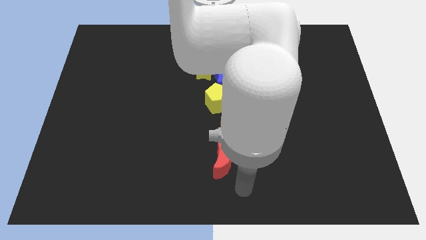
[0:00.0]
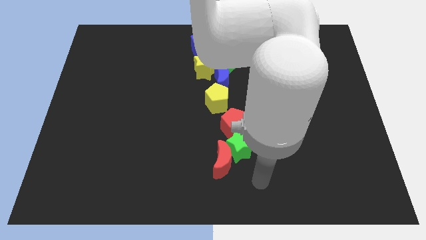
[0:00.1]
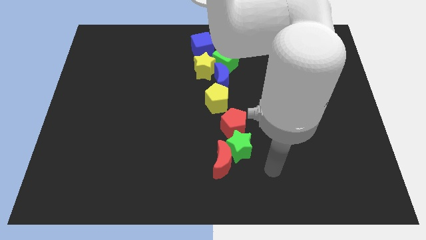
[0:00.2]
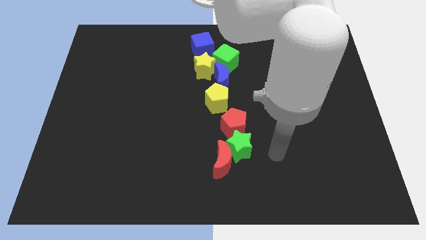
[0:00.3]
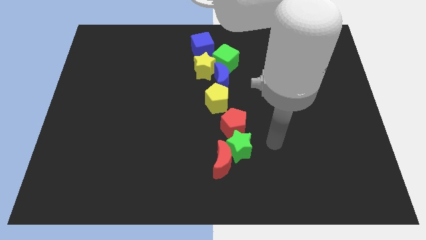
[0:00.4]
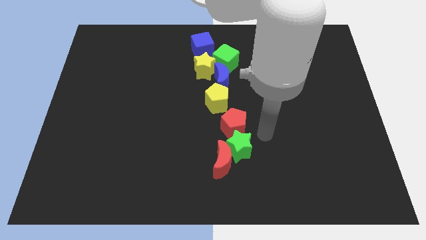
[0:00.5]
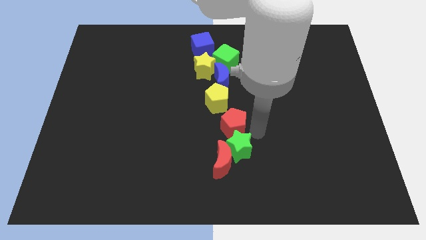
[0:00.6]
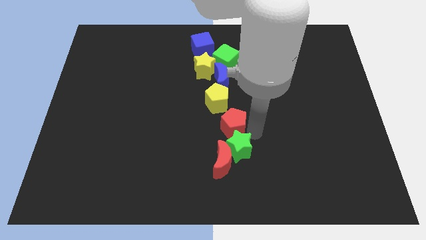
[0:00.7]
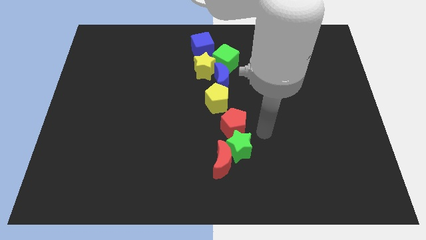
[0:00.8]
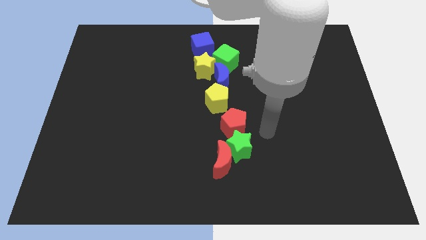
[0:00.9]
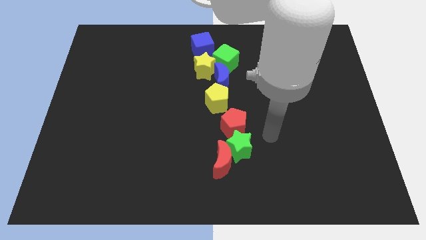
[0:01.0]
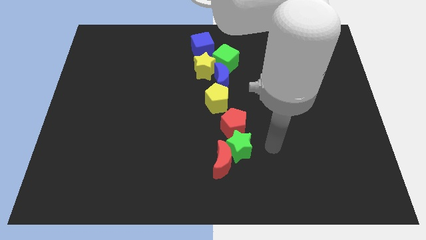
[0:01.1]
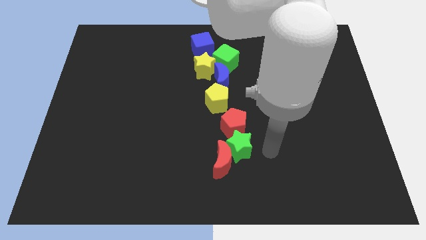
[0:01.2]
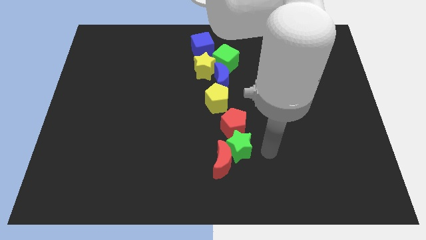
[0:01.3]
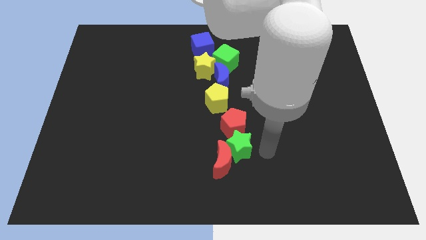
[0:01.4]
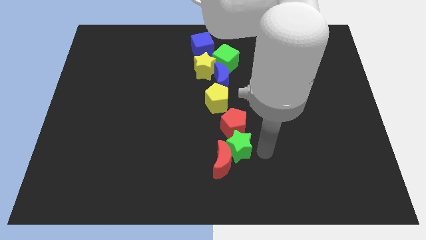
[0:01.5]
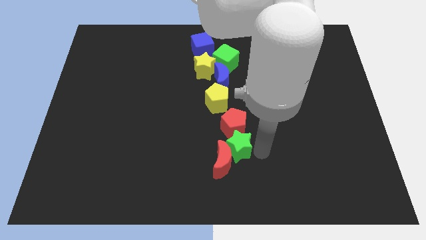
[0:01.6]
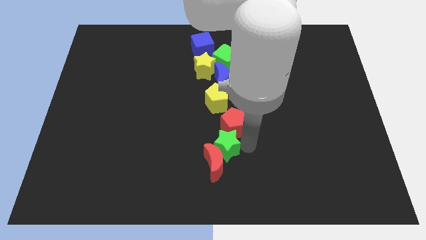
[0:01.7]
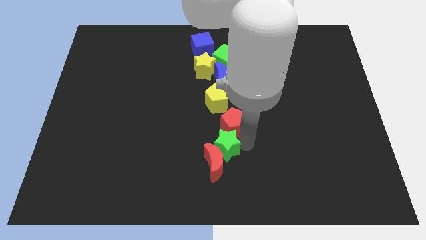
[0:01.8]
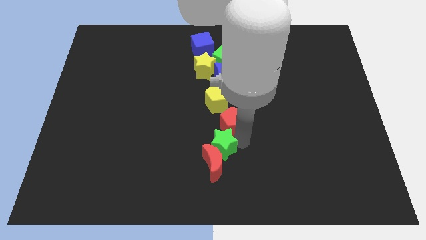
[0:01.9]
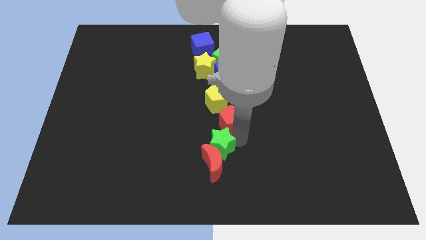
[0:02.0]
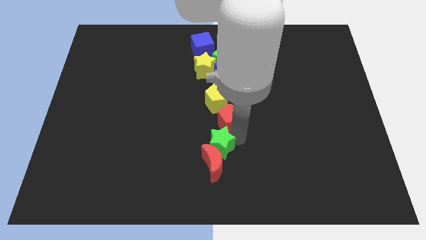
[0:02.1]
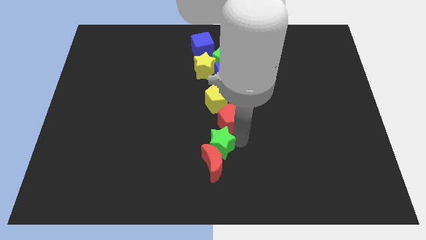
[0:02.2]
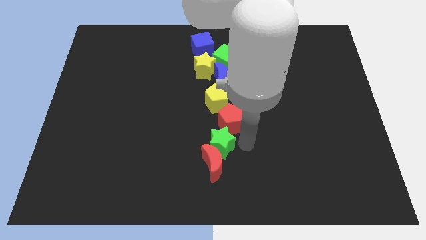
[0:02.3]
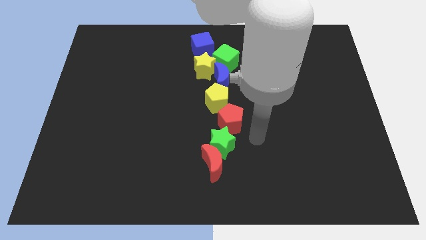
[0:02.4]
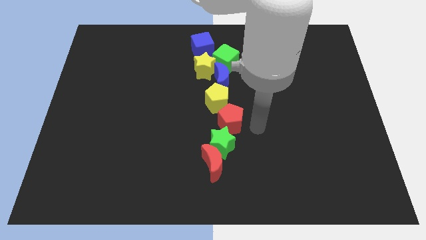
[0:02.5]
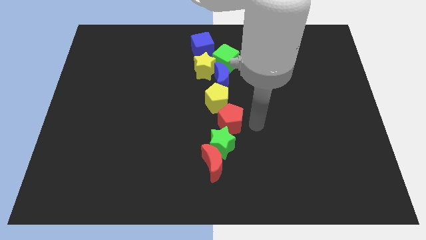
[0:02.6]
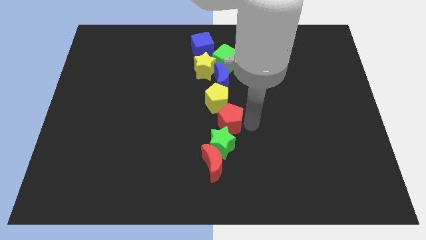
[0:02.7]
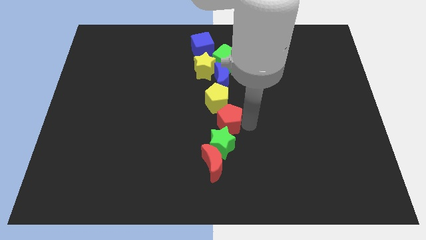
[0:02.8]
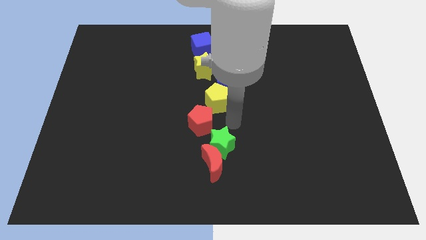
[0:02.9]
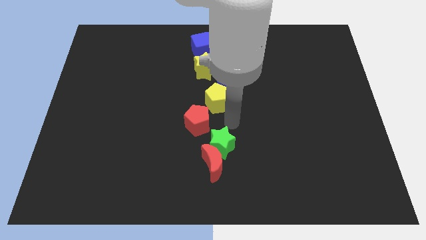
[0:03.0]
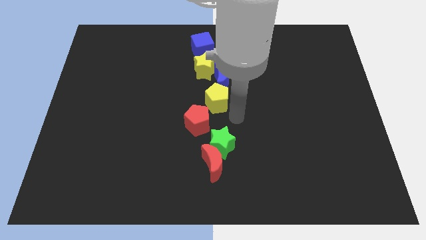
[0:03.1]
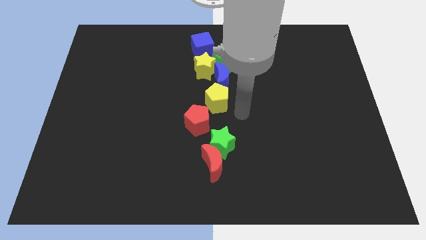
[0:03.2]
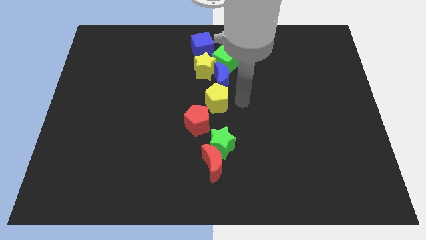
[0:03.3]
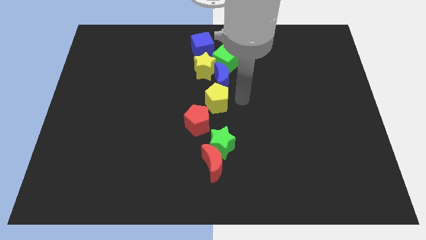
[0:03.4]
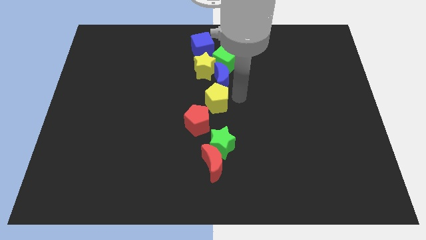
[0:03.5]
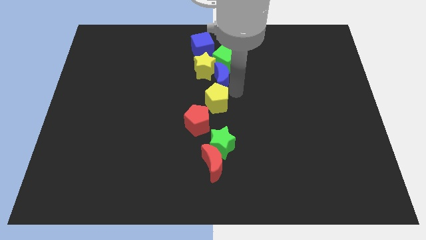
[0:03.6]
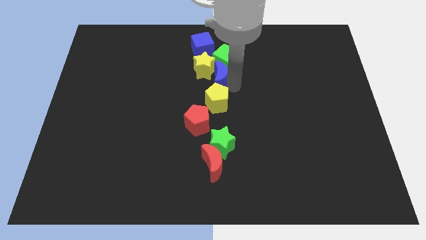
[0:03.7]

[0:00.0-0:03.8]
move the green star and red pentagon slightly to the left

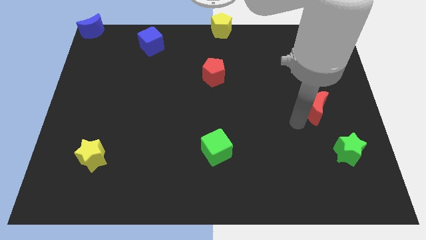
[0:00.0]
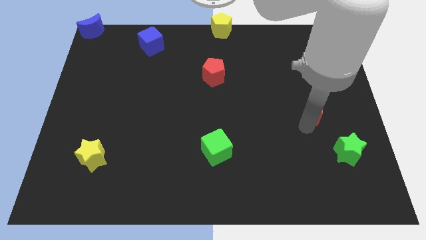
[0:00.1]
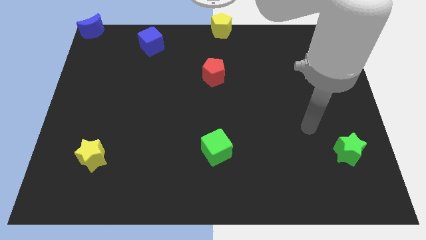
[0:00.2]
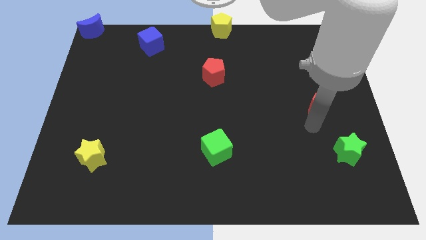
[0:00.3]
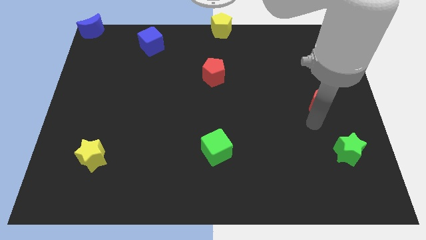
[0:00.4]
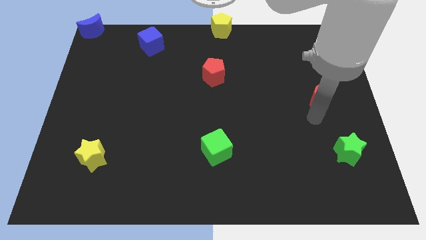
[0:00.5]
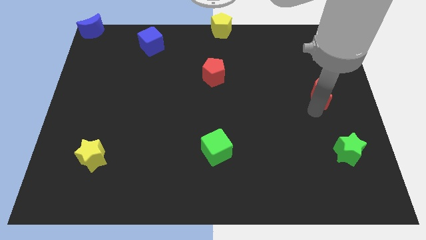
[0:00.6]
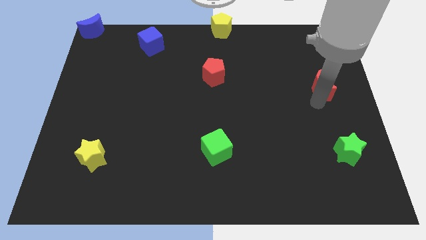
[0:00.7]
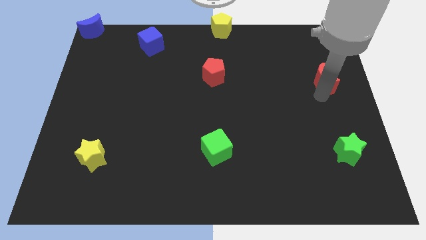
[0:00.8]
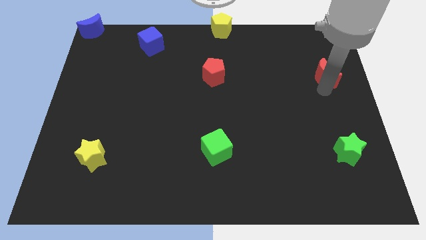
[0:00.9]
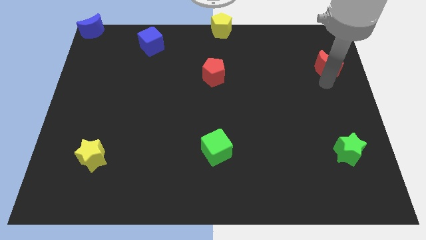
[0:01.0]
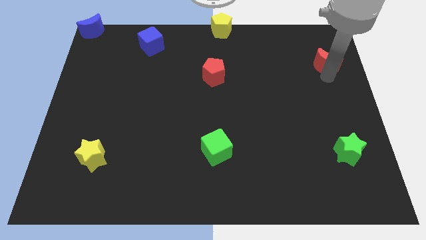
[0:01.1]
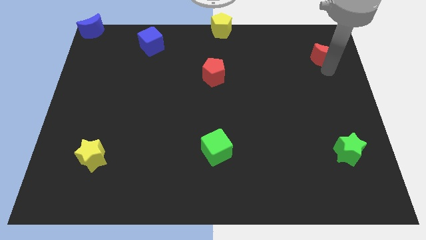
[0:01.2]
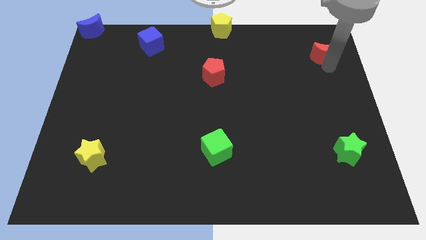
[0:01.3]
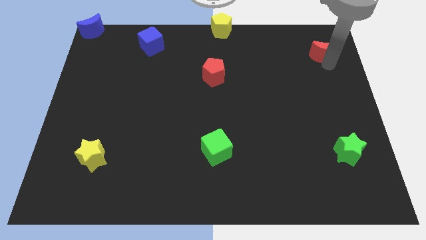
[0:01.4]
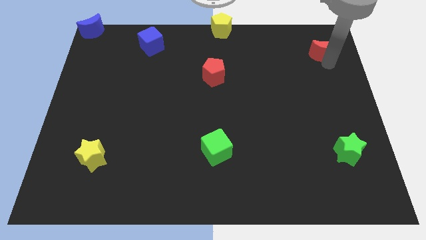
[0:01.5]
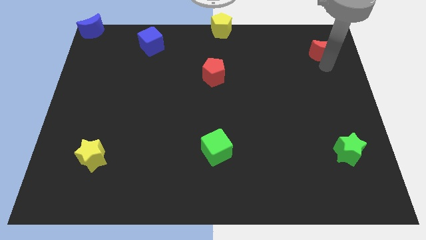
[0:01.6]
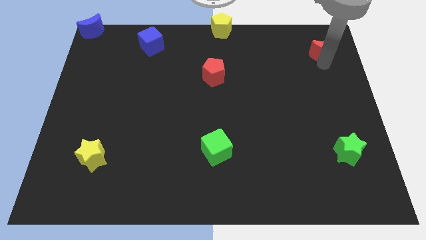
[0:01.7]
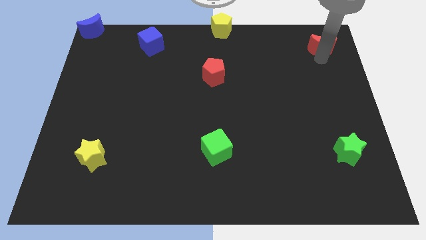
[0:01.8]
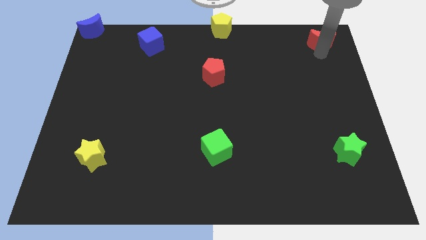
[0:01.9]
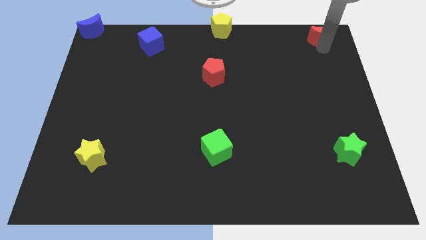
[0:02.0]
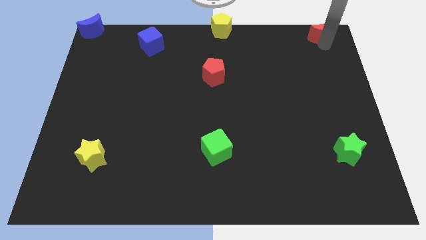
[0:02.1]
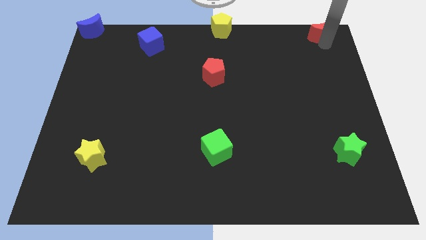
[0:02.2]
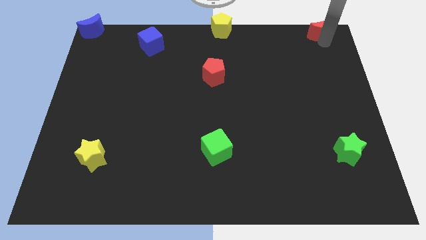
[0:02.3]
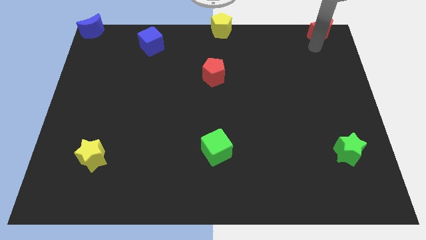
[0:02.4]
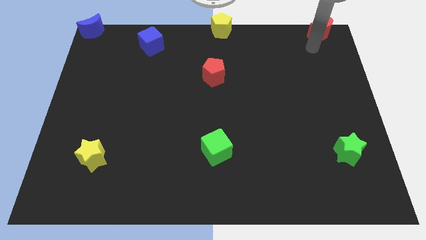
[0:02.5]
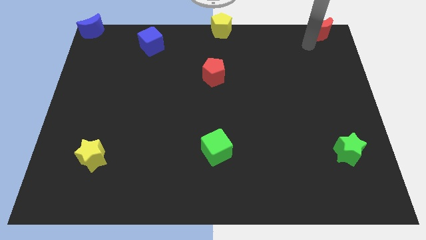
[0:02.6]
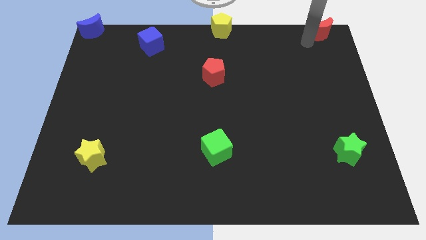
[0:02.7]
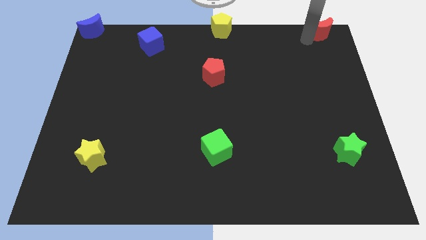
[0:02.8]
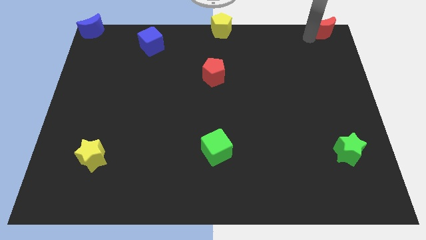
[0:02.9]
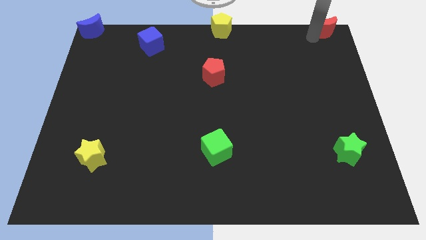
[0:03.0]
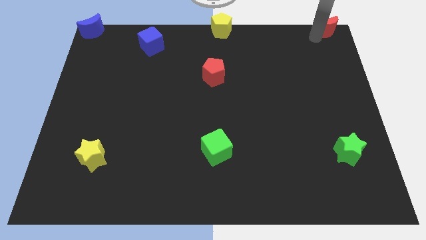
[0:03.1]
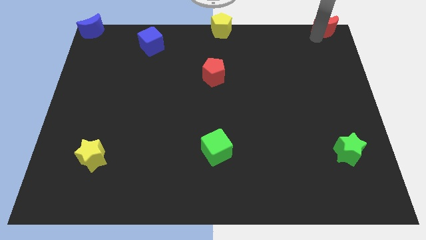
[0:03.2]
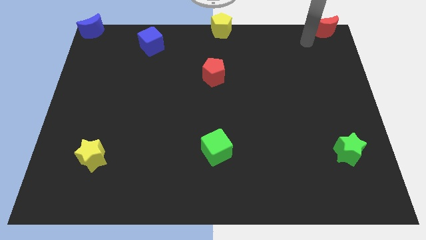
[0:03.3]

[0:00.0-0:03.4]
place red crescent towards top right corner

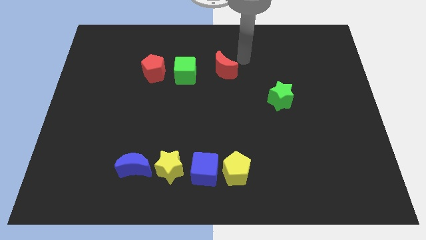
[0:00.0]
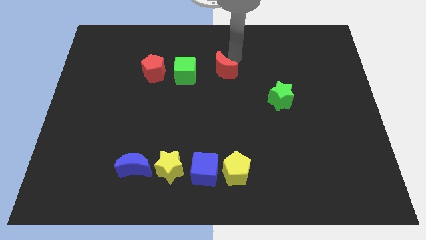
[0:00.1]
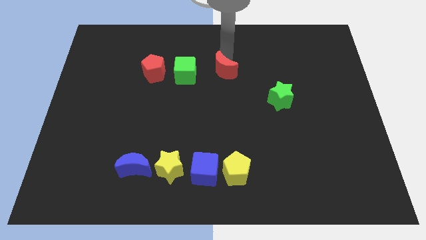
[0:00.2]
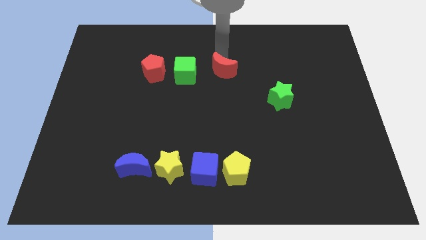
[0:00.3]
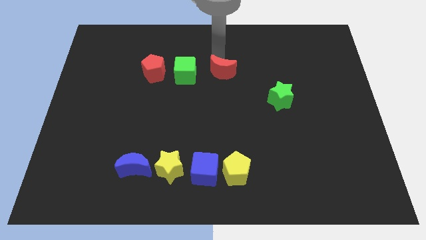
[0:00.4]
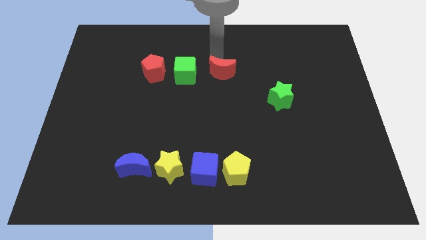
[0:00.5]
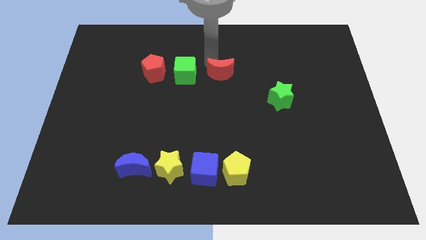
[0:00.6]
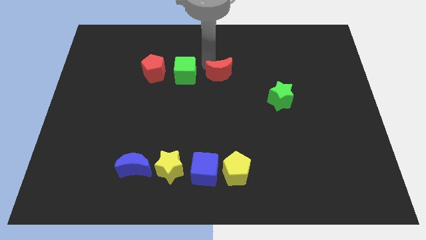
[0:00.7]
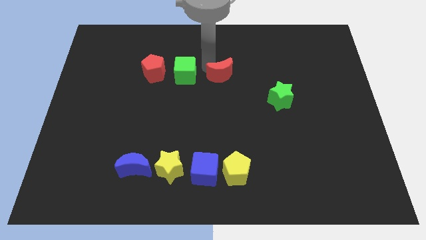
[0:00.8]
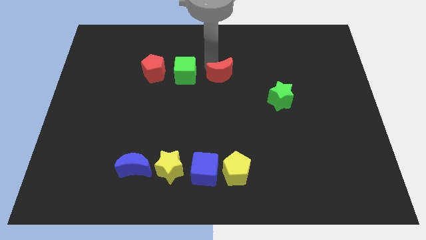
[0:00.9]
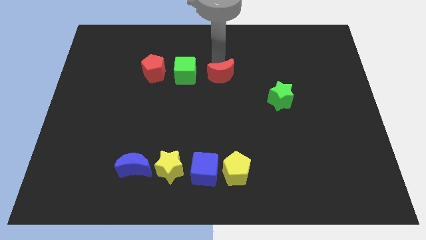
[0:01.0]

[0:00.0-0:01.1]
push the red crescent close to the green cube

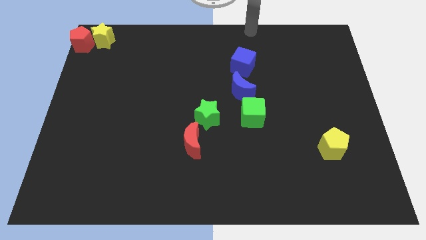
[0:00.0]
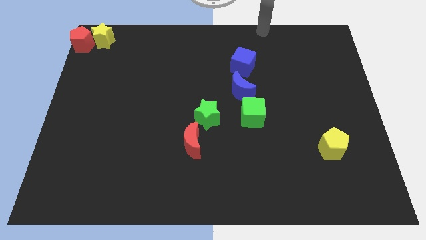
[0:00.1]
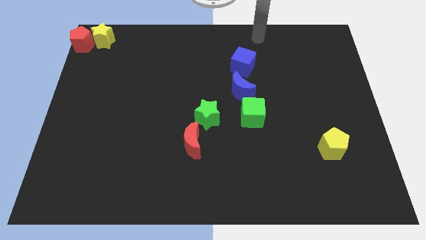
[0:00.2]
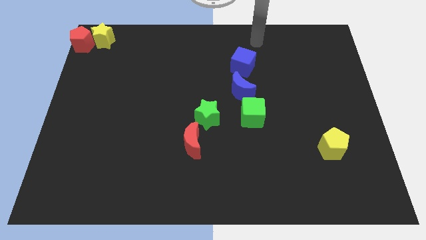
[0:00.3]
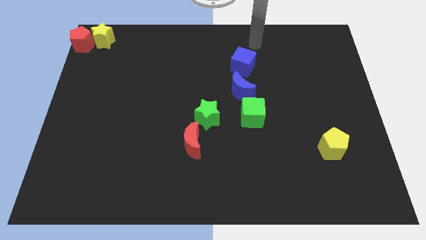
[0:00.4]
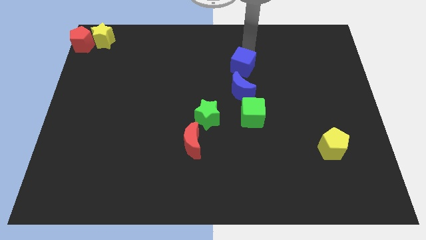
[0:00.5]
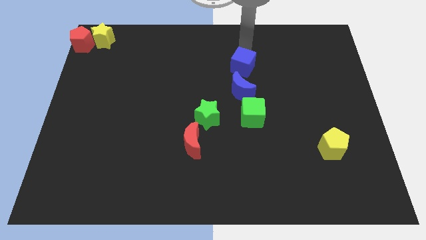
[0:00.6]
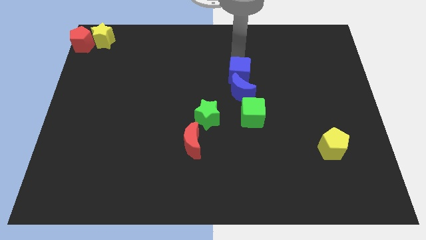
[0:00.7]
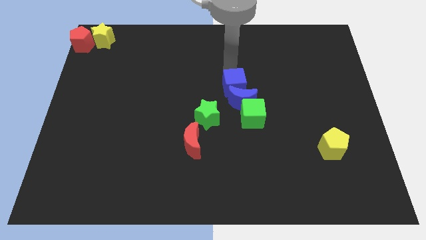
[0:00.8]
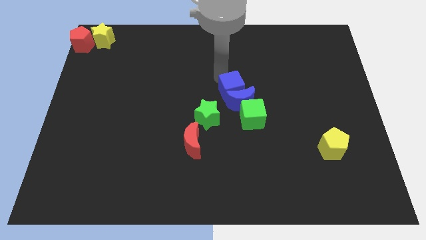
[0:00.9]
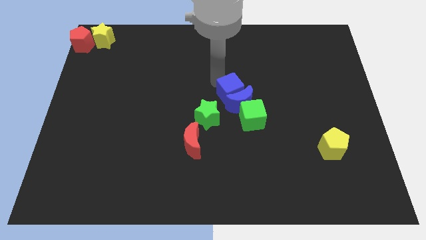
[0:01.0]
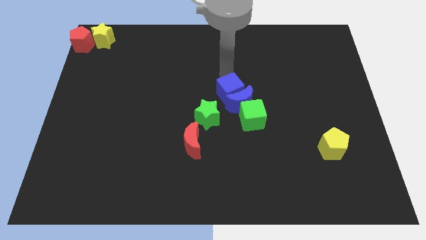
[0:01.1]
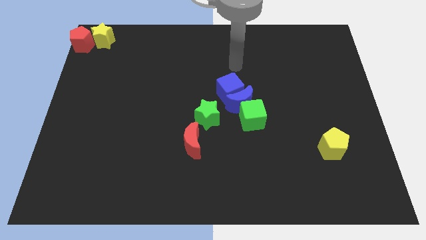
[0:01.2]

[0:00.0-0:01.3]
push the blue cube into the blue crescent
